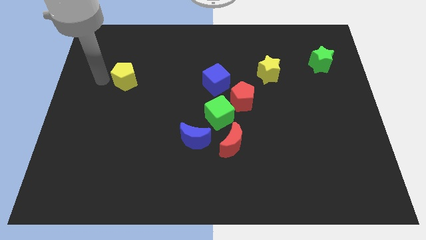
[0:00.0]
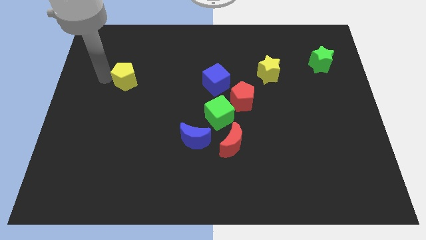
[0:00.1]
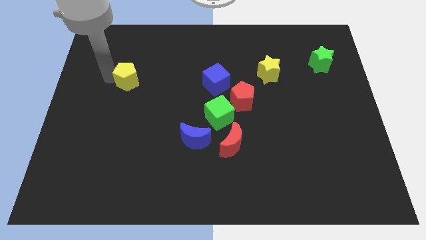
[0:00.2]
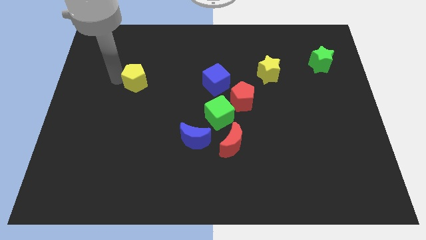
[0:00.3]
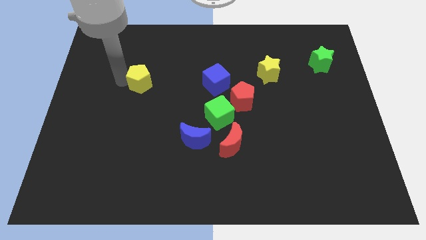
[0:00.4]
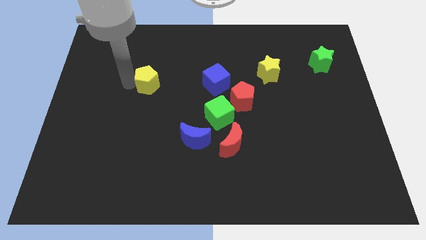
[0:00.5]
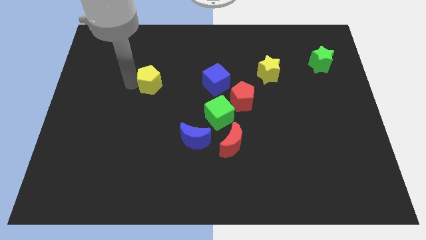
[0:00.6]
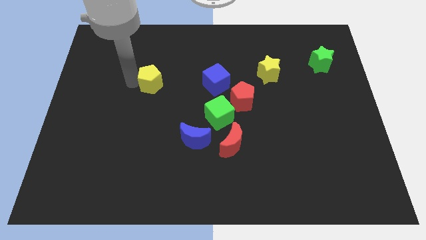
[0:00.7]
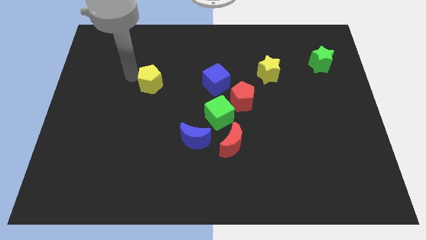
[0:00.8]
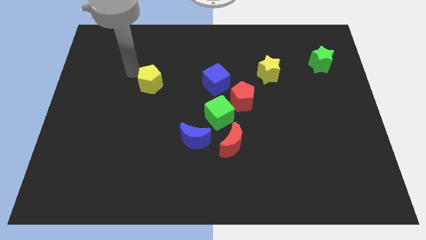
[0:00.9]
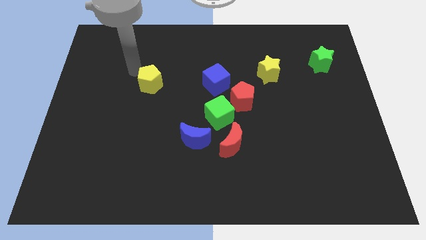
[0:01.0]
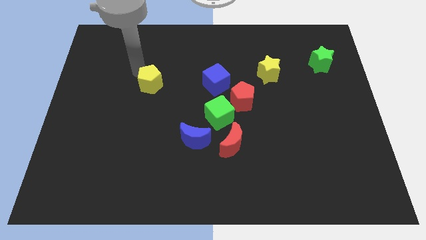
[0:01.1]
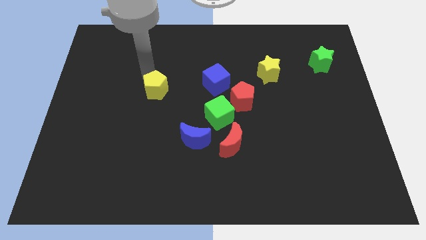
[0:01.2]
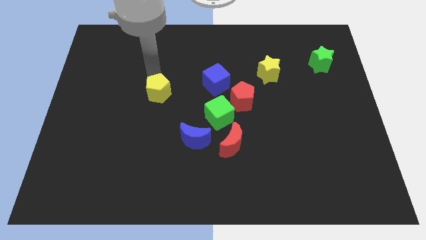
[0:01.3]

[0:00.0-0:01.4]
move the yellow pentagon diagonal left to the green cube

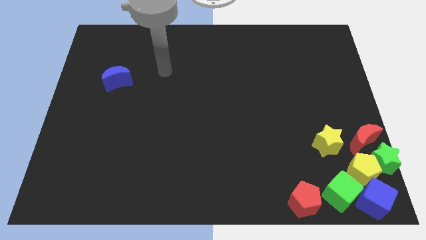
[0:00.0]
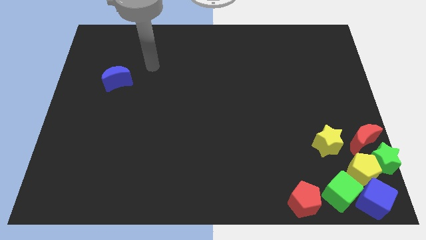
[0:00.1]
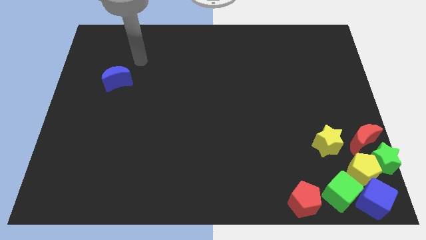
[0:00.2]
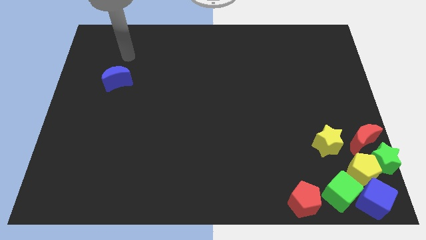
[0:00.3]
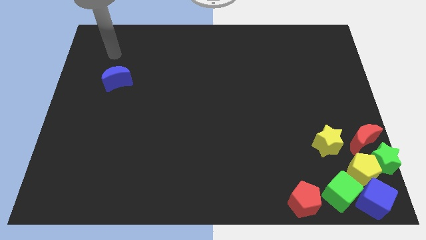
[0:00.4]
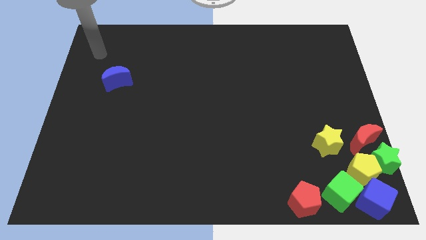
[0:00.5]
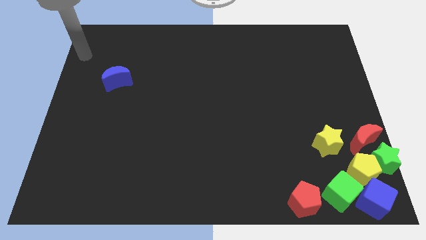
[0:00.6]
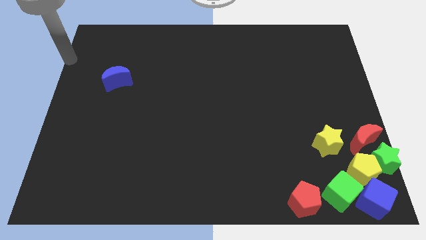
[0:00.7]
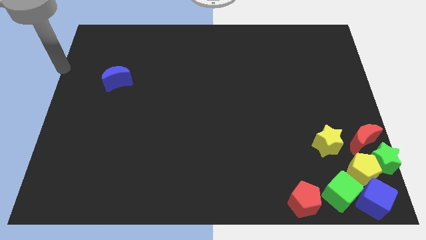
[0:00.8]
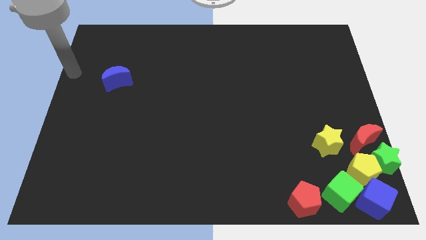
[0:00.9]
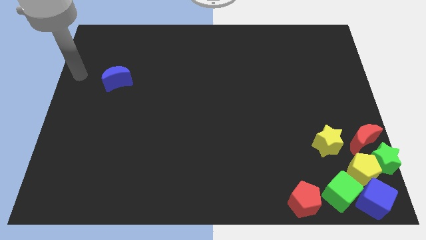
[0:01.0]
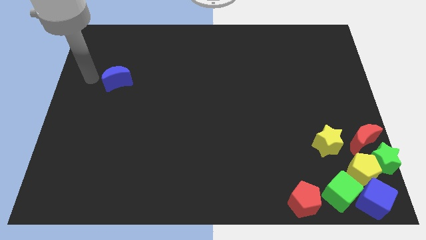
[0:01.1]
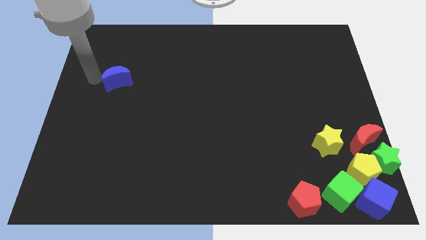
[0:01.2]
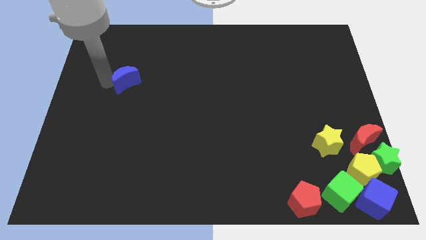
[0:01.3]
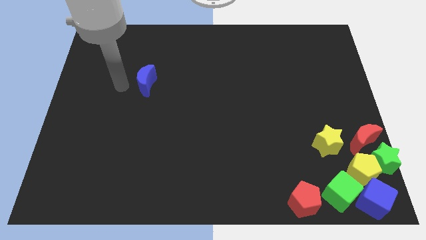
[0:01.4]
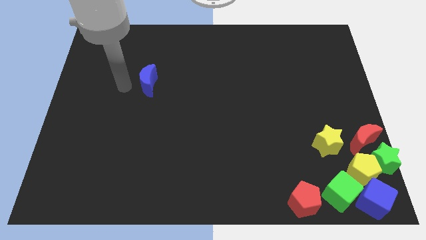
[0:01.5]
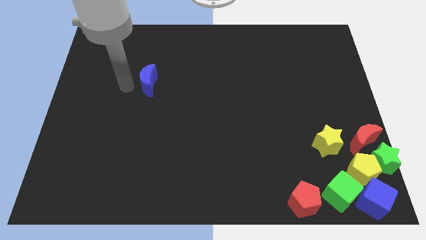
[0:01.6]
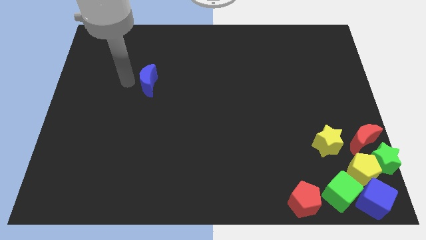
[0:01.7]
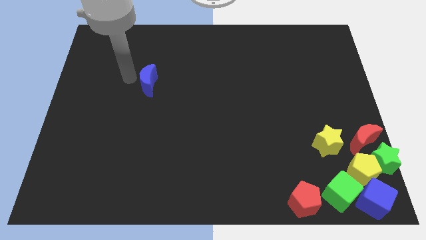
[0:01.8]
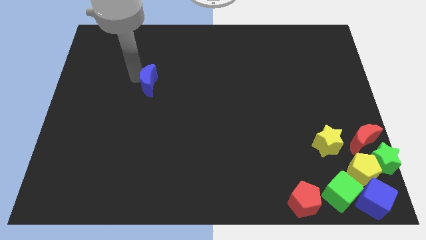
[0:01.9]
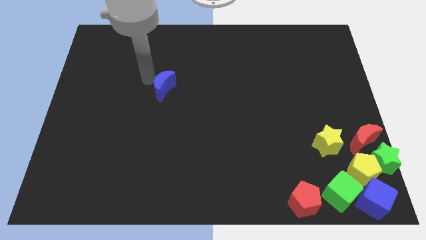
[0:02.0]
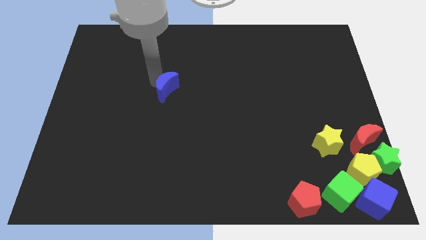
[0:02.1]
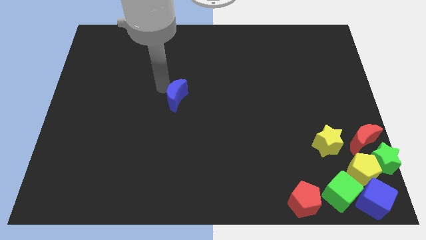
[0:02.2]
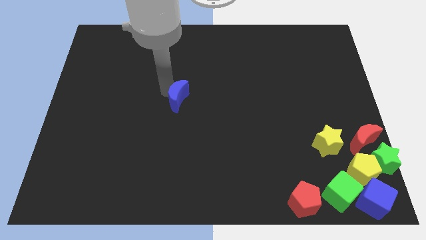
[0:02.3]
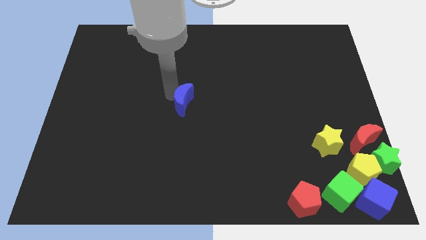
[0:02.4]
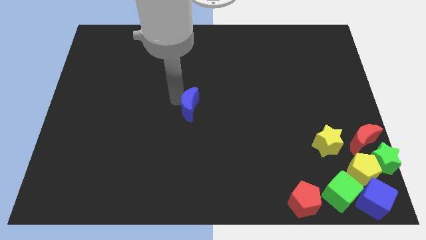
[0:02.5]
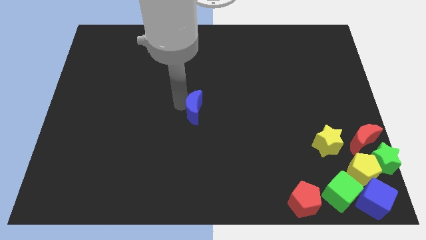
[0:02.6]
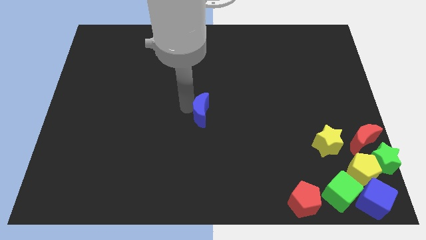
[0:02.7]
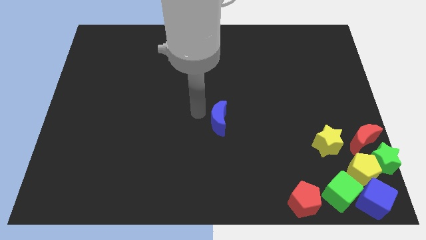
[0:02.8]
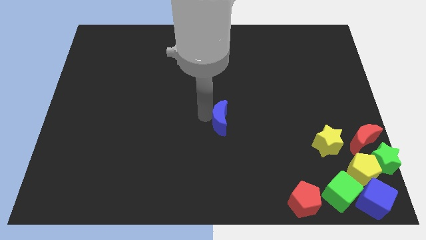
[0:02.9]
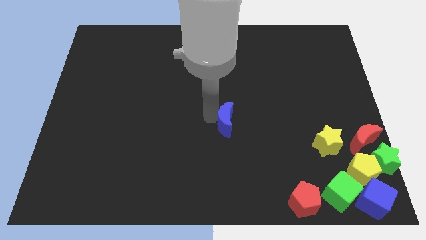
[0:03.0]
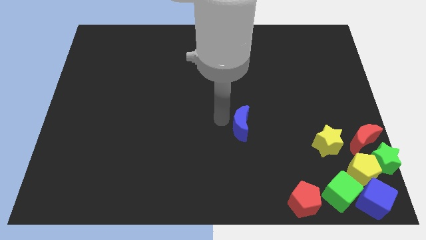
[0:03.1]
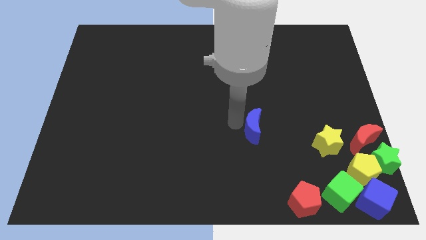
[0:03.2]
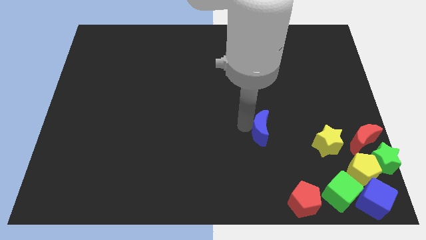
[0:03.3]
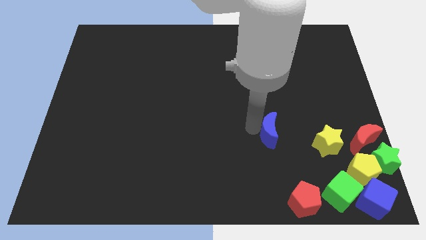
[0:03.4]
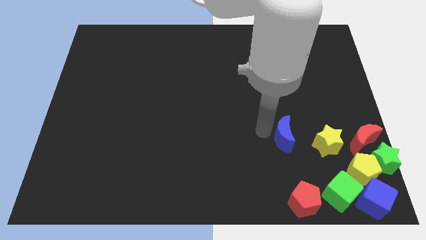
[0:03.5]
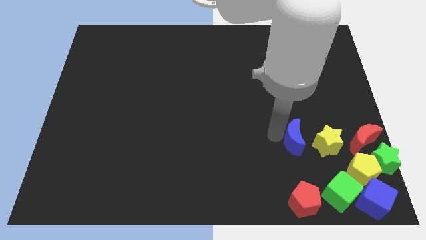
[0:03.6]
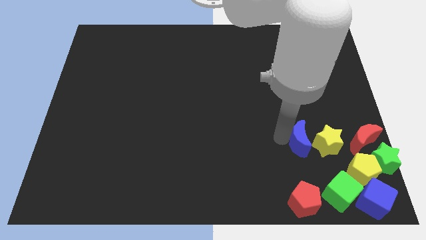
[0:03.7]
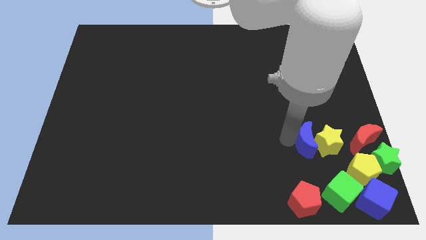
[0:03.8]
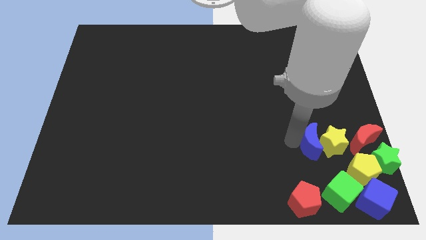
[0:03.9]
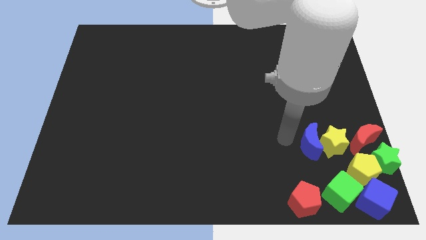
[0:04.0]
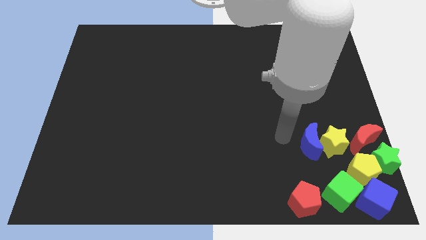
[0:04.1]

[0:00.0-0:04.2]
push the blue moon into yellow star

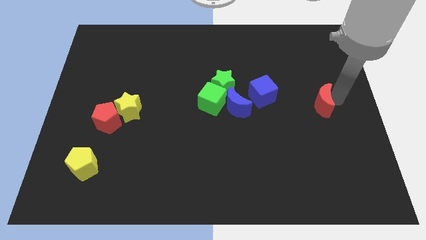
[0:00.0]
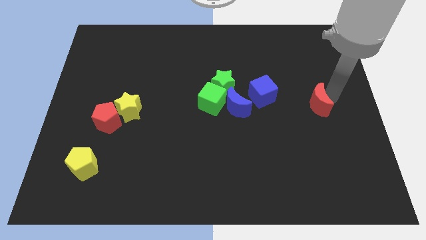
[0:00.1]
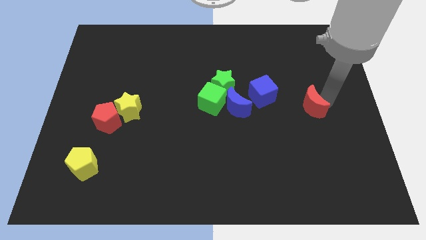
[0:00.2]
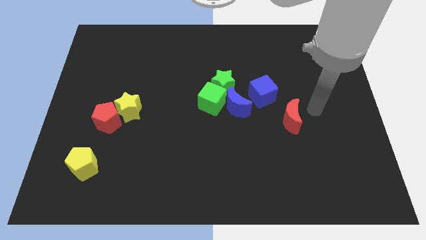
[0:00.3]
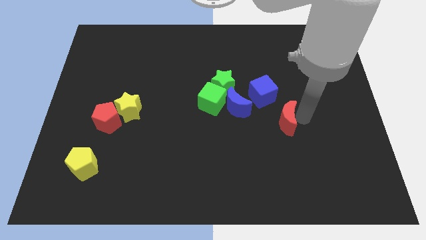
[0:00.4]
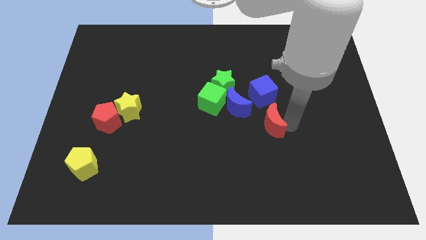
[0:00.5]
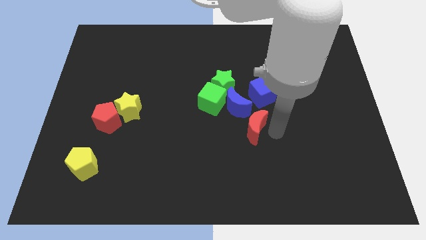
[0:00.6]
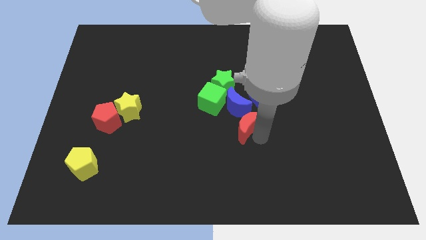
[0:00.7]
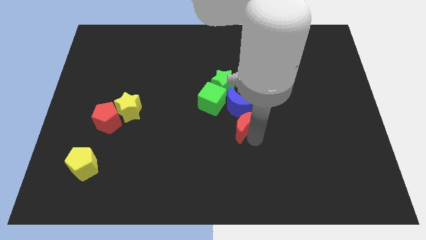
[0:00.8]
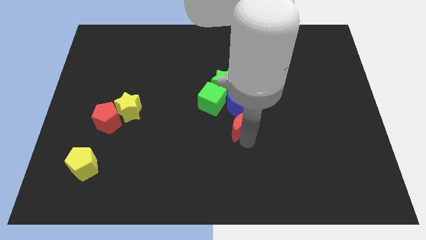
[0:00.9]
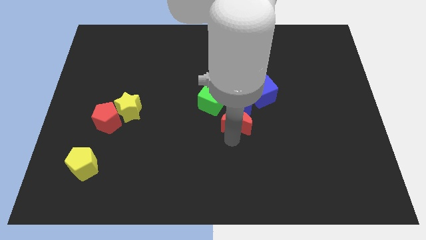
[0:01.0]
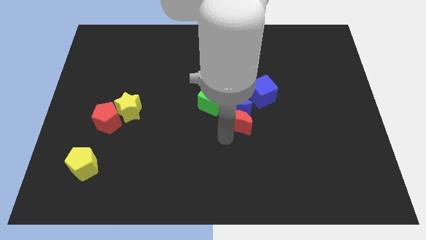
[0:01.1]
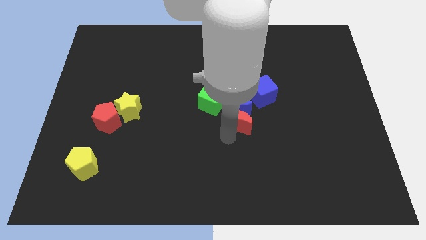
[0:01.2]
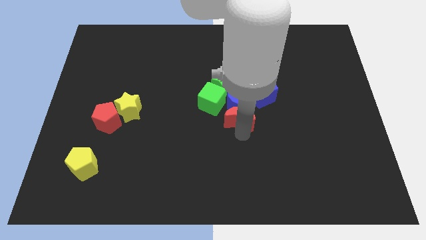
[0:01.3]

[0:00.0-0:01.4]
place the red moon below the blue moon

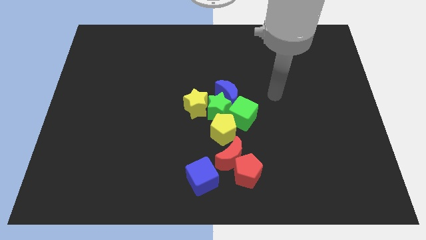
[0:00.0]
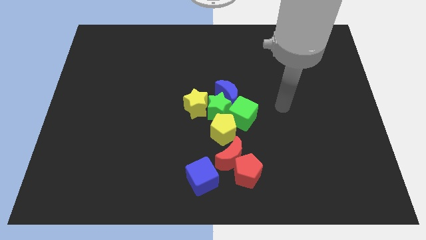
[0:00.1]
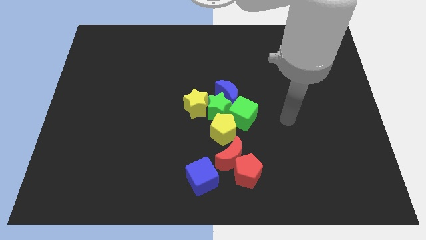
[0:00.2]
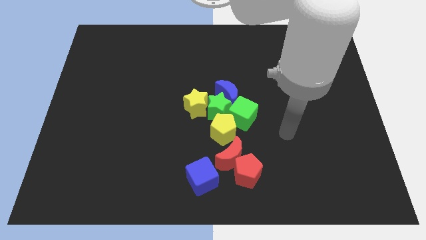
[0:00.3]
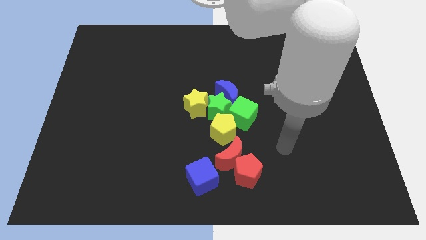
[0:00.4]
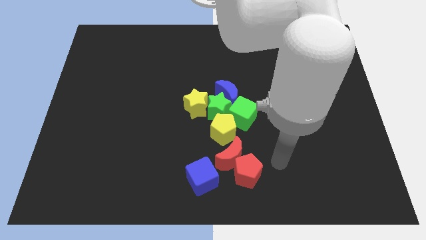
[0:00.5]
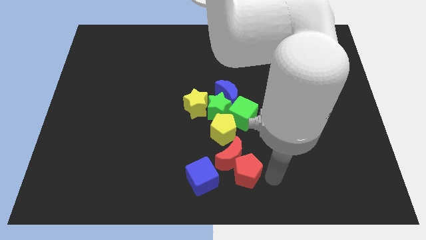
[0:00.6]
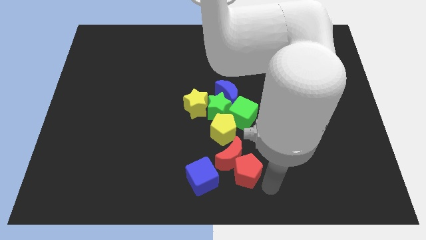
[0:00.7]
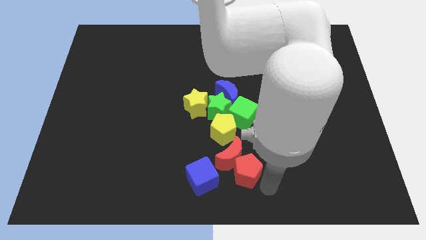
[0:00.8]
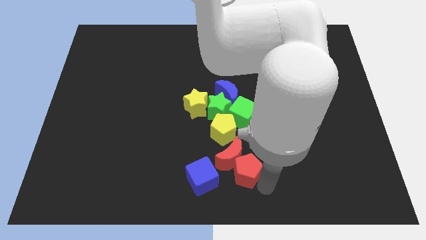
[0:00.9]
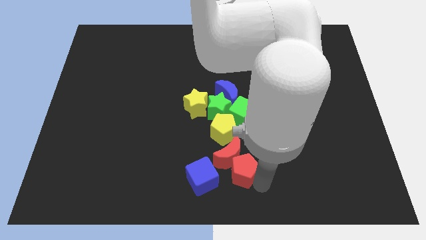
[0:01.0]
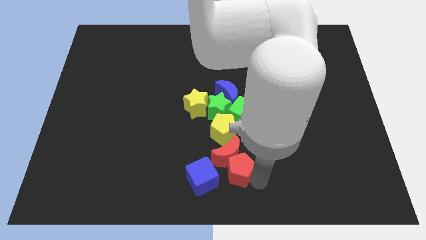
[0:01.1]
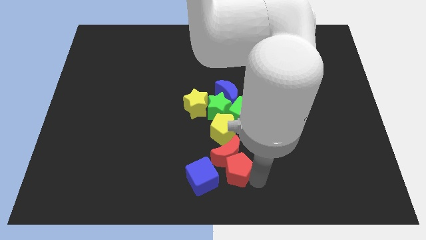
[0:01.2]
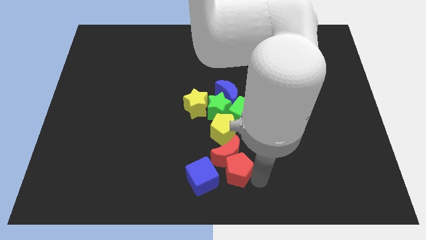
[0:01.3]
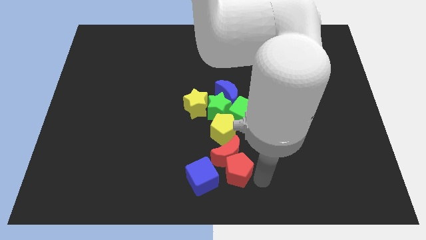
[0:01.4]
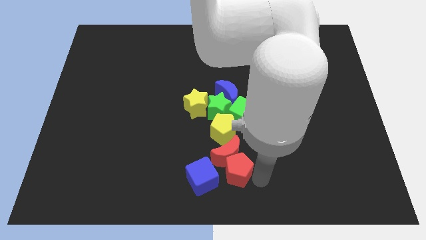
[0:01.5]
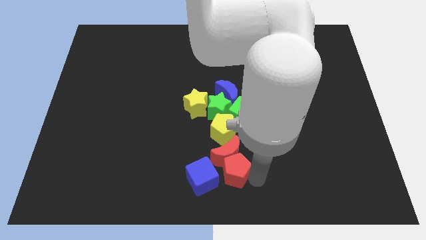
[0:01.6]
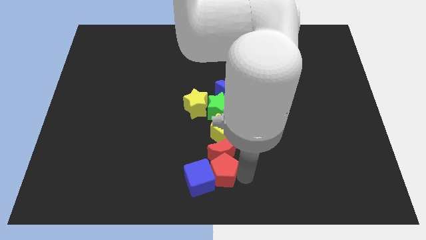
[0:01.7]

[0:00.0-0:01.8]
move the red pentagon into the blue cube
